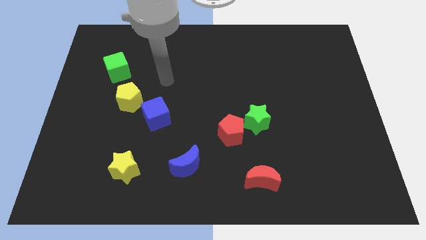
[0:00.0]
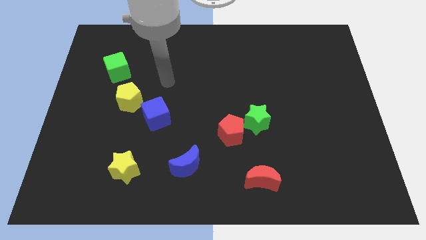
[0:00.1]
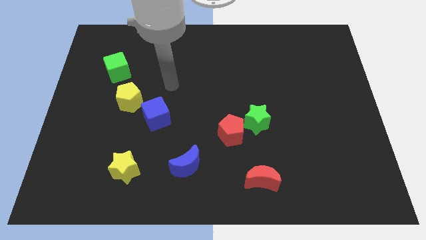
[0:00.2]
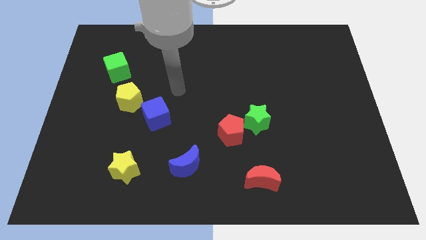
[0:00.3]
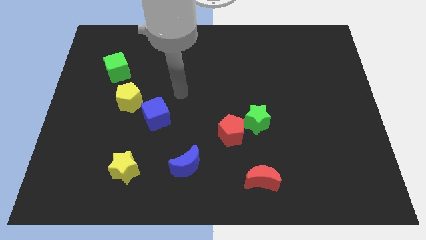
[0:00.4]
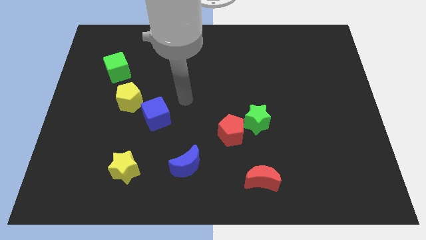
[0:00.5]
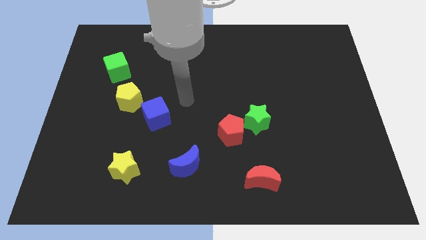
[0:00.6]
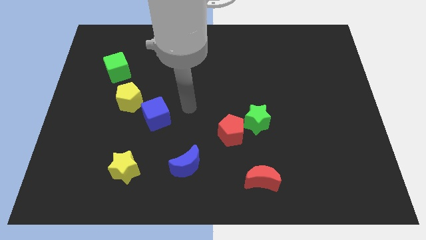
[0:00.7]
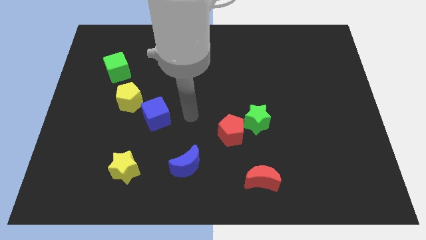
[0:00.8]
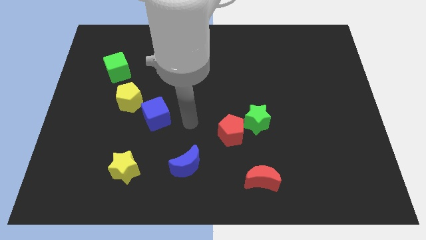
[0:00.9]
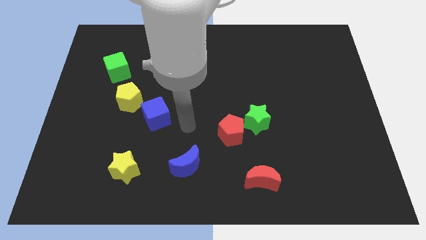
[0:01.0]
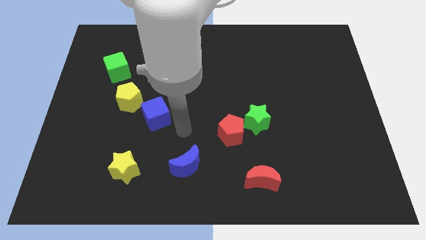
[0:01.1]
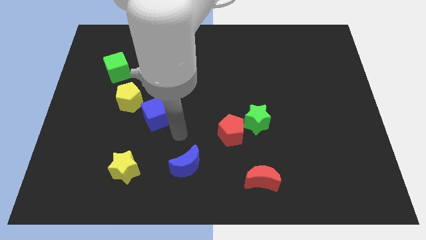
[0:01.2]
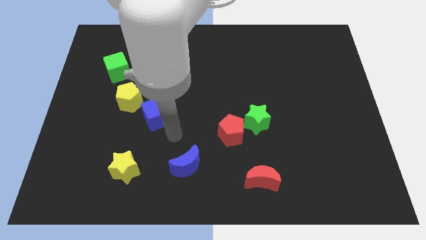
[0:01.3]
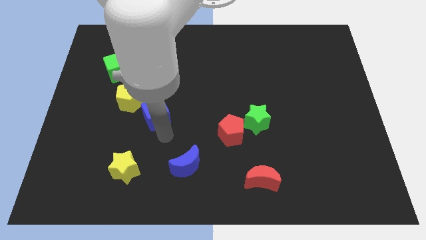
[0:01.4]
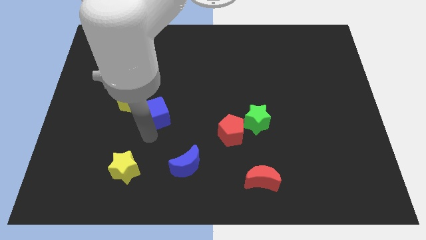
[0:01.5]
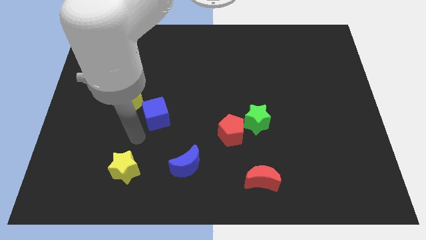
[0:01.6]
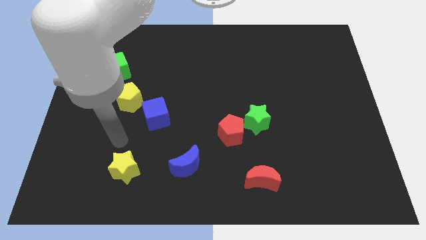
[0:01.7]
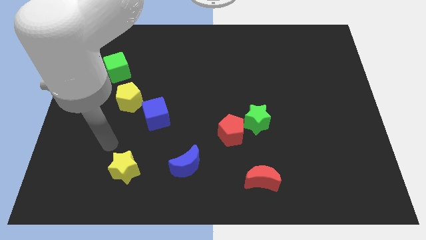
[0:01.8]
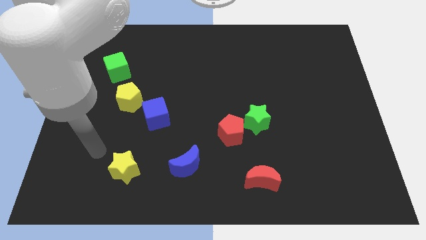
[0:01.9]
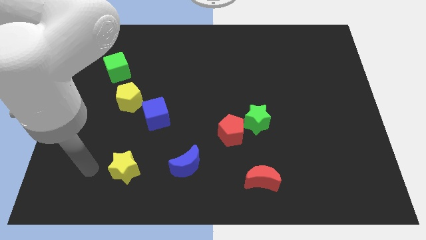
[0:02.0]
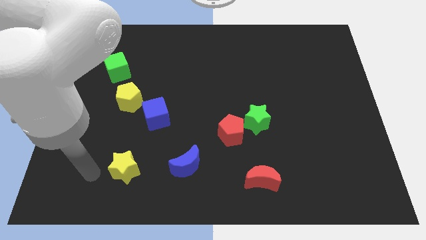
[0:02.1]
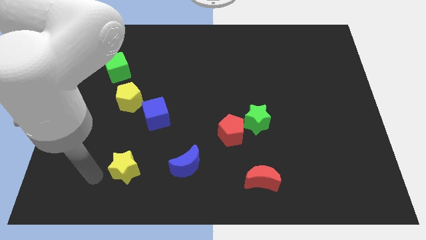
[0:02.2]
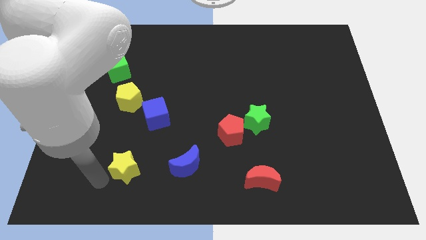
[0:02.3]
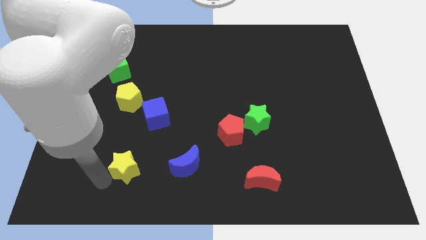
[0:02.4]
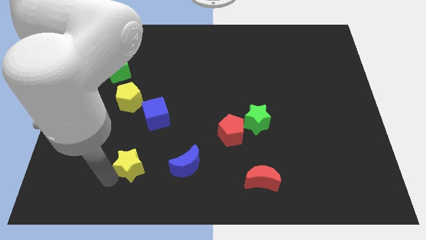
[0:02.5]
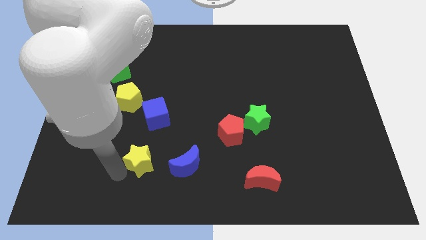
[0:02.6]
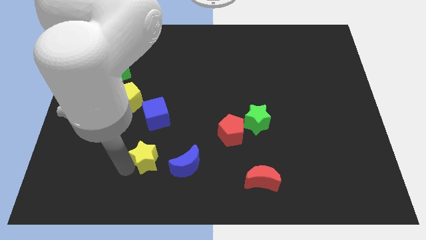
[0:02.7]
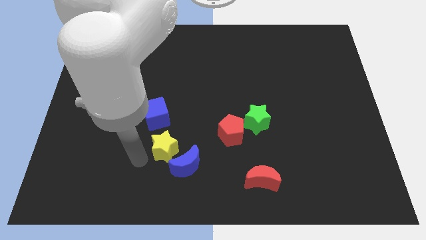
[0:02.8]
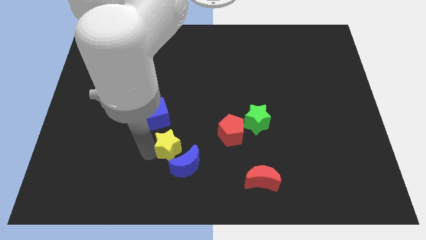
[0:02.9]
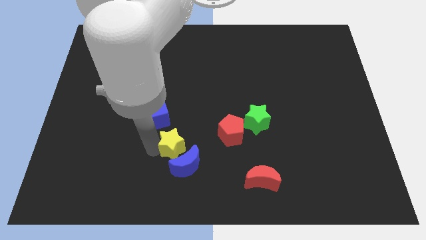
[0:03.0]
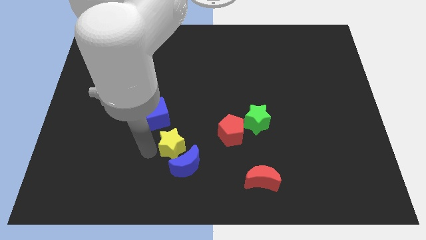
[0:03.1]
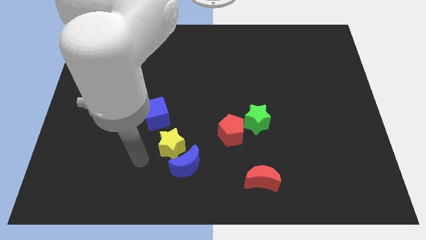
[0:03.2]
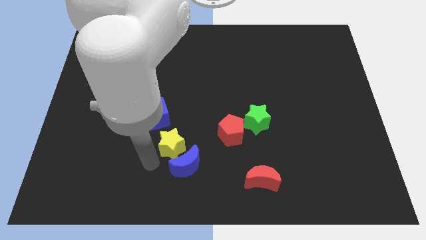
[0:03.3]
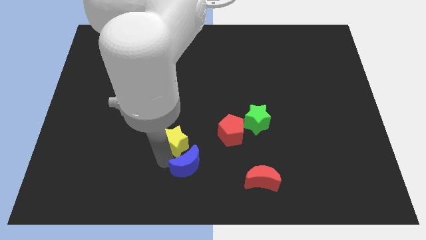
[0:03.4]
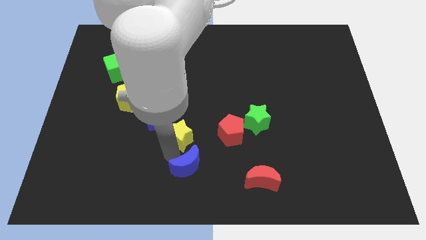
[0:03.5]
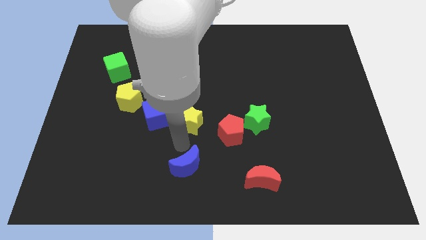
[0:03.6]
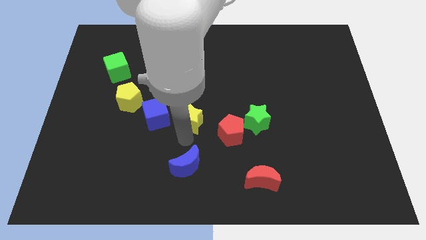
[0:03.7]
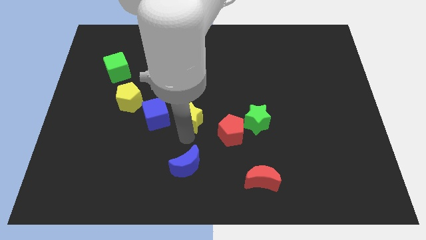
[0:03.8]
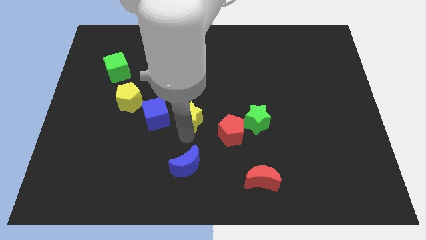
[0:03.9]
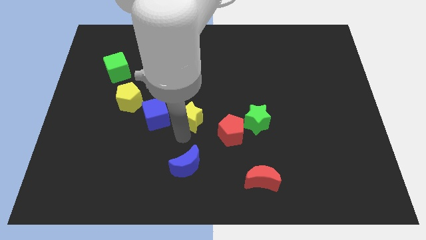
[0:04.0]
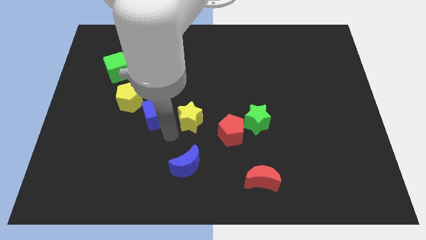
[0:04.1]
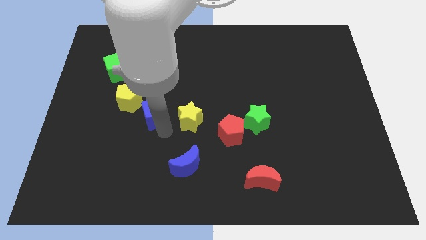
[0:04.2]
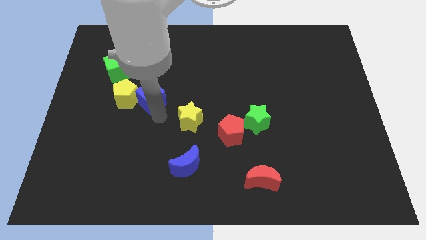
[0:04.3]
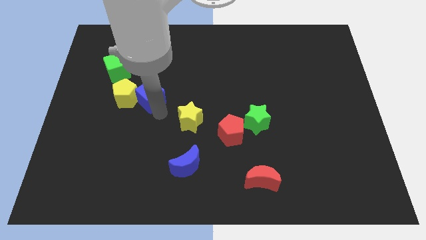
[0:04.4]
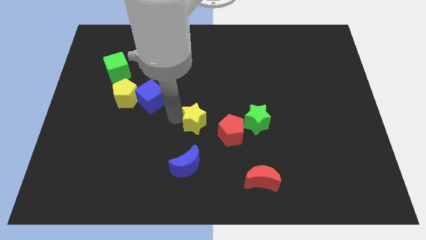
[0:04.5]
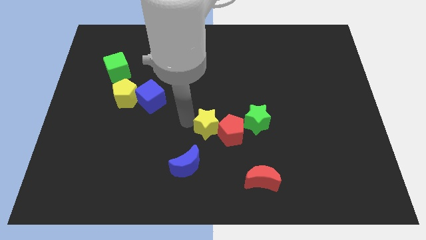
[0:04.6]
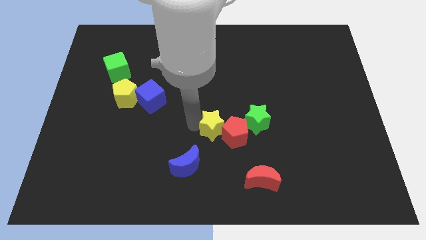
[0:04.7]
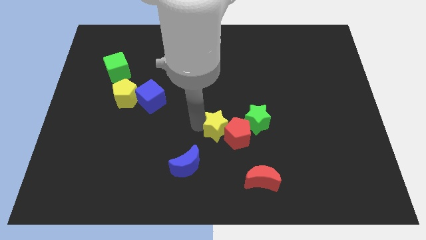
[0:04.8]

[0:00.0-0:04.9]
put the yellow star to the red pentagon

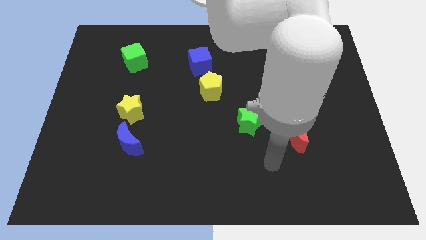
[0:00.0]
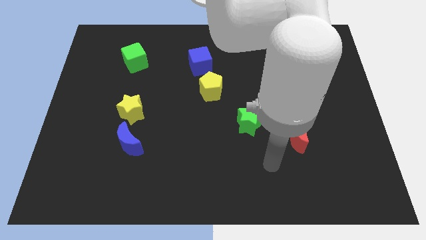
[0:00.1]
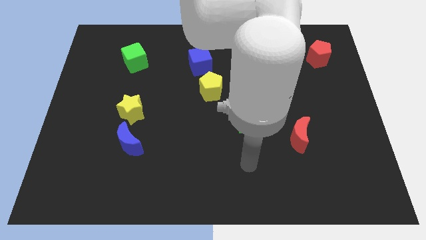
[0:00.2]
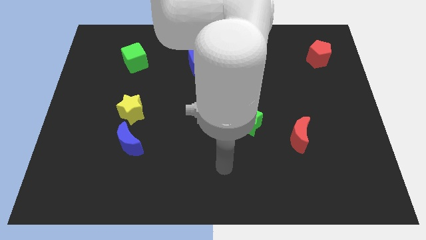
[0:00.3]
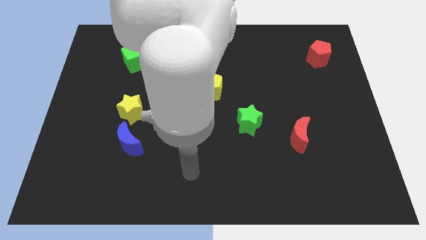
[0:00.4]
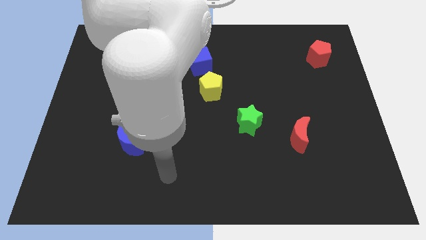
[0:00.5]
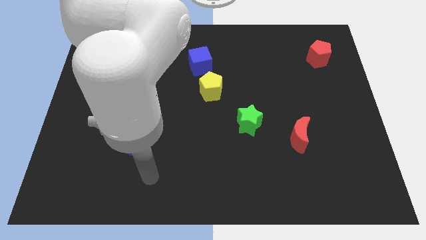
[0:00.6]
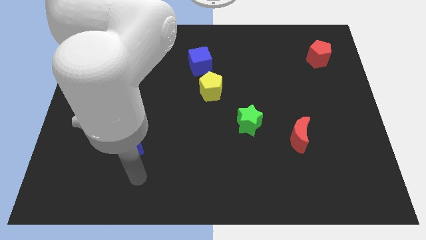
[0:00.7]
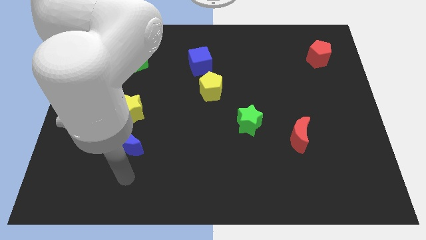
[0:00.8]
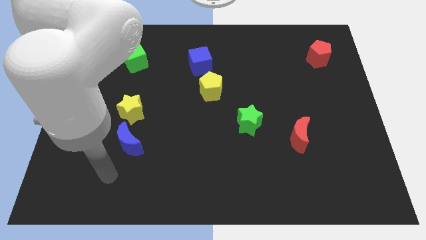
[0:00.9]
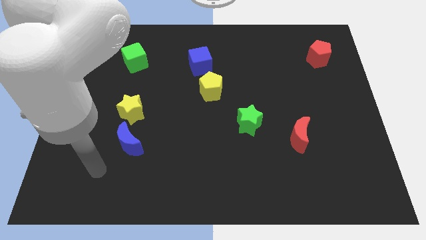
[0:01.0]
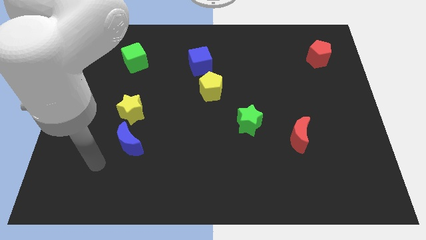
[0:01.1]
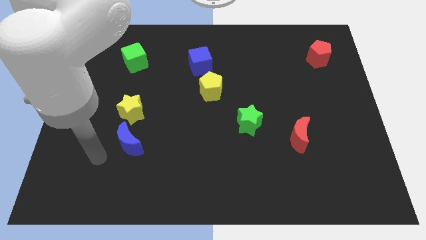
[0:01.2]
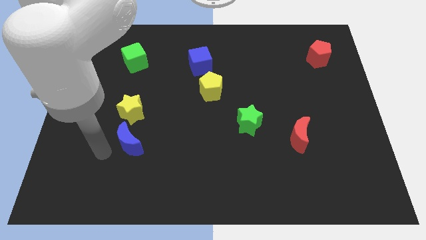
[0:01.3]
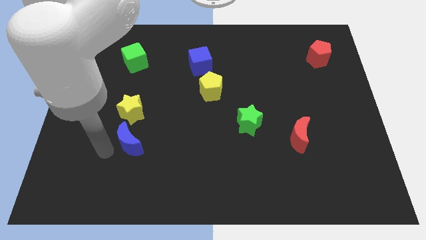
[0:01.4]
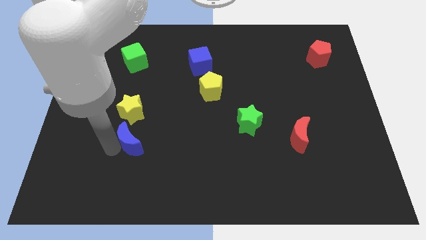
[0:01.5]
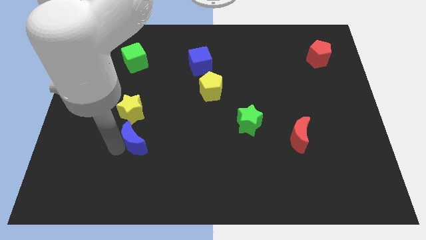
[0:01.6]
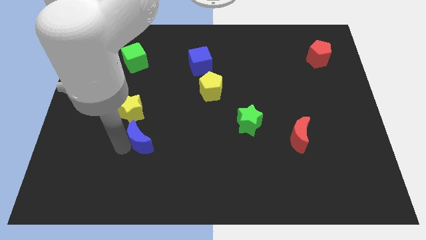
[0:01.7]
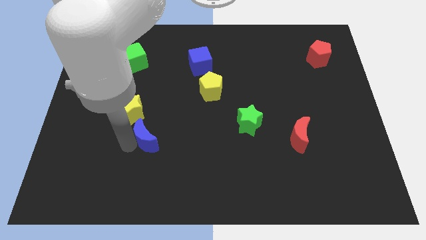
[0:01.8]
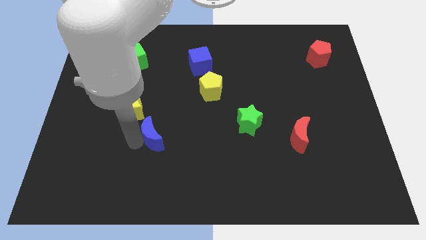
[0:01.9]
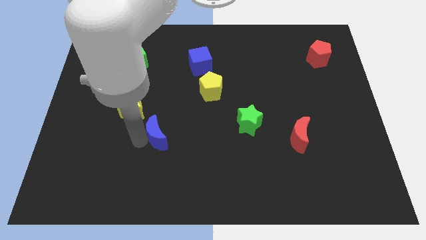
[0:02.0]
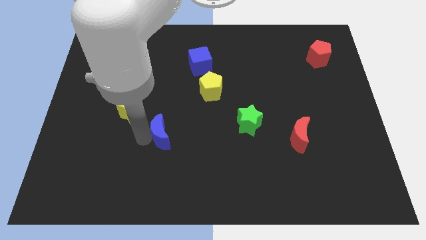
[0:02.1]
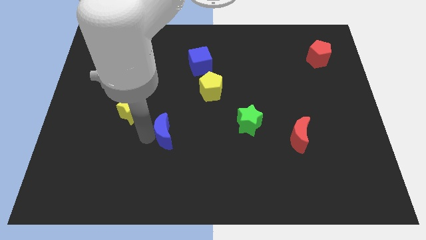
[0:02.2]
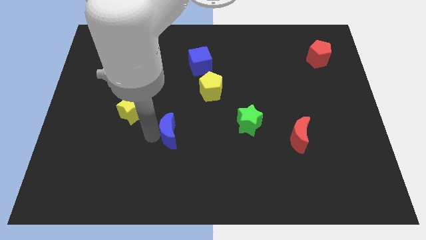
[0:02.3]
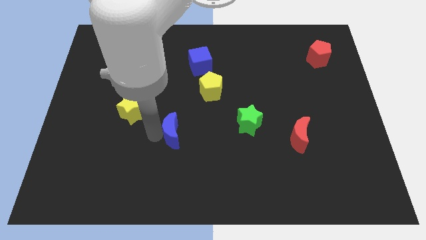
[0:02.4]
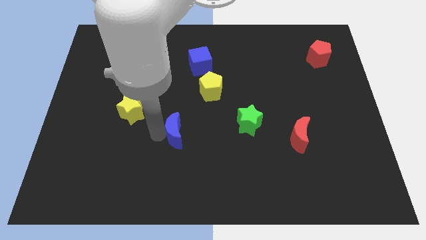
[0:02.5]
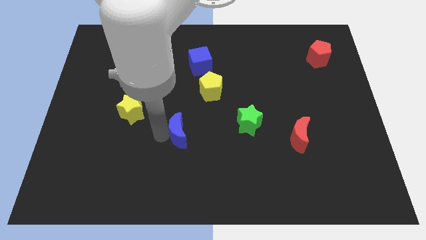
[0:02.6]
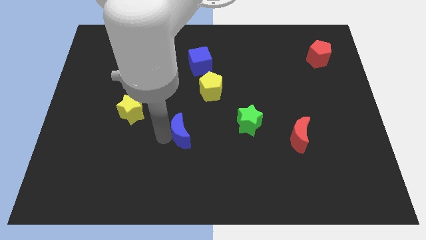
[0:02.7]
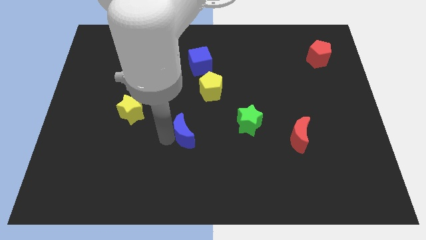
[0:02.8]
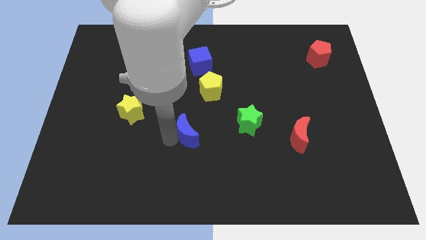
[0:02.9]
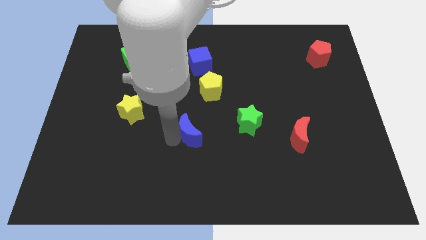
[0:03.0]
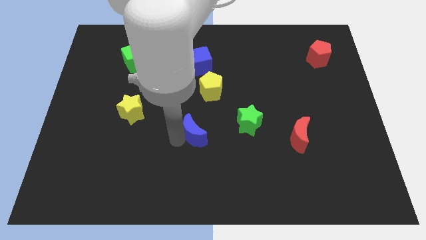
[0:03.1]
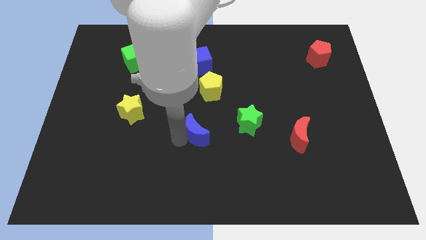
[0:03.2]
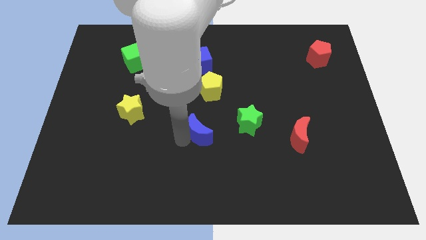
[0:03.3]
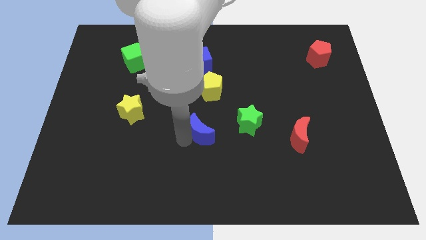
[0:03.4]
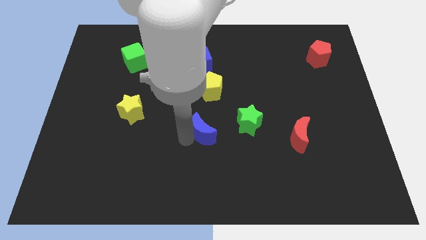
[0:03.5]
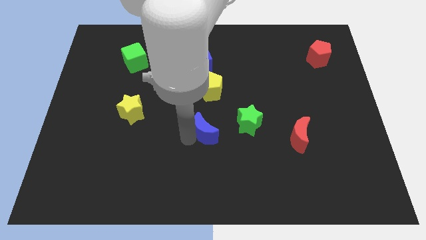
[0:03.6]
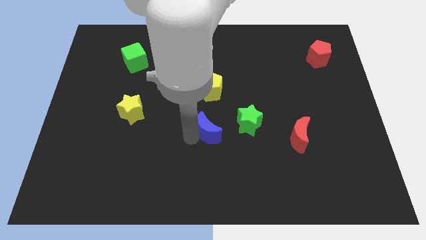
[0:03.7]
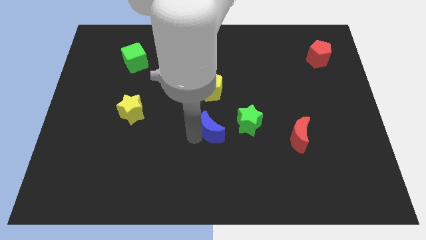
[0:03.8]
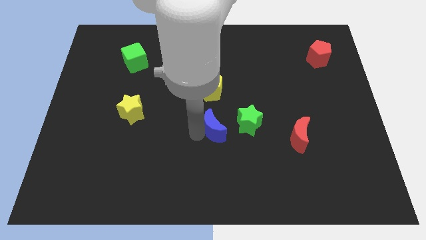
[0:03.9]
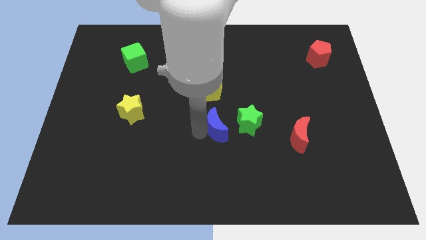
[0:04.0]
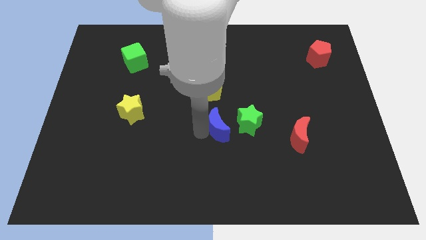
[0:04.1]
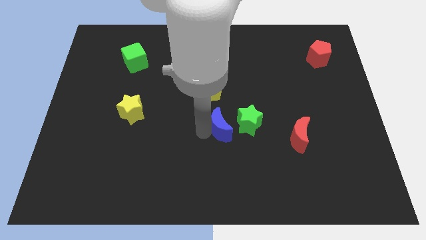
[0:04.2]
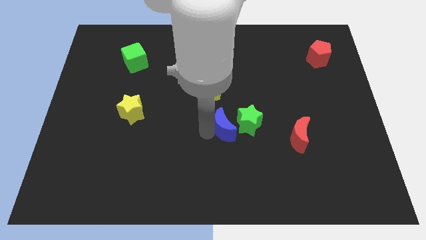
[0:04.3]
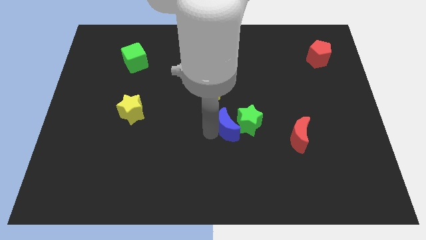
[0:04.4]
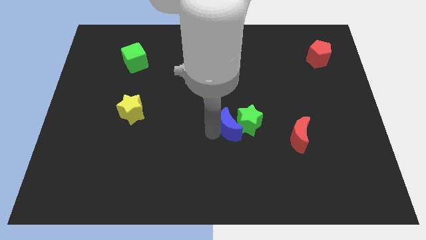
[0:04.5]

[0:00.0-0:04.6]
move the blue moon close to the green star
